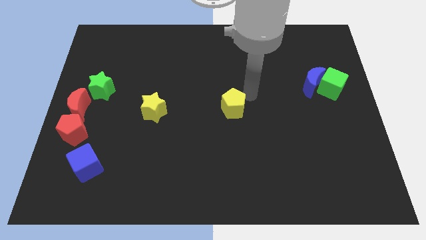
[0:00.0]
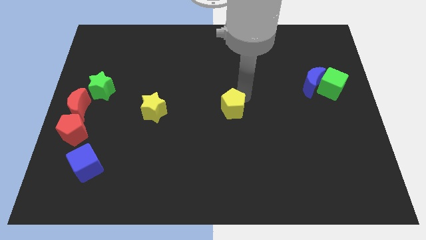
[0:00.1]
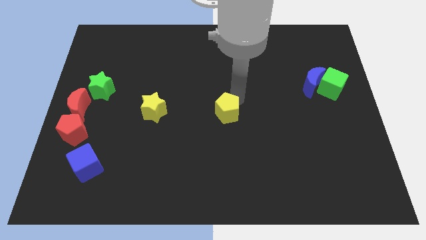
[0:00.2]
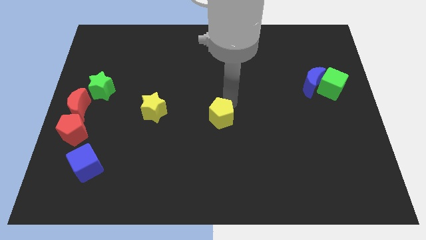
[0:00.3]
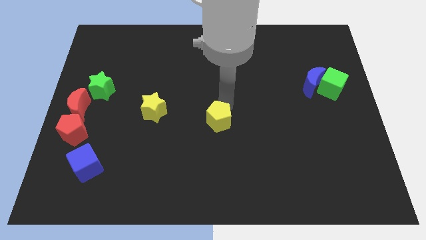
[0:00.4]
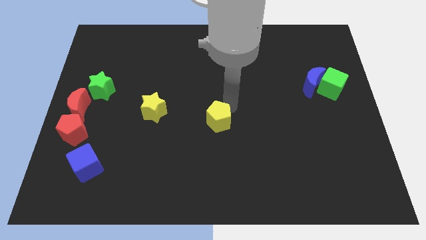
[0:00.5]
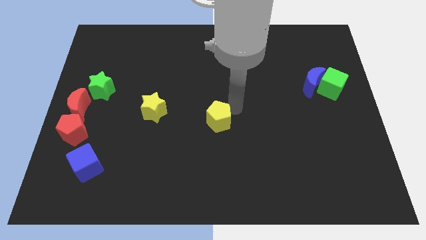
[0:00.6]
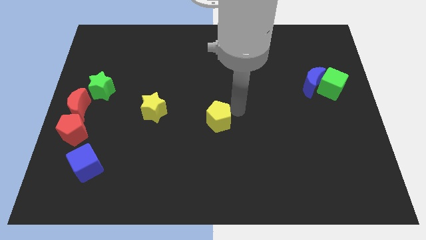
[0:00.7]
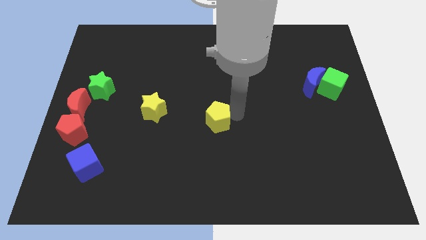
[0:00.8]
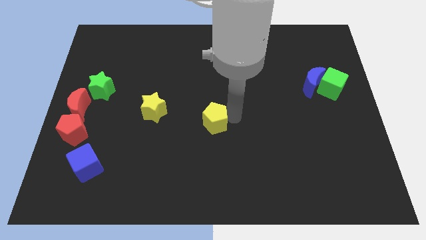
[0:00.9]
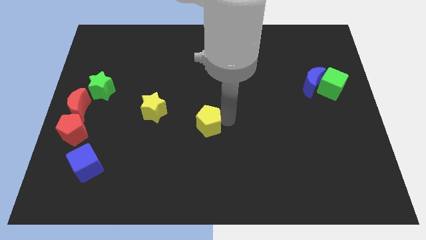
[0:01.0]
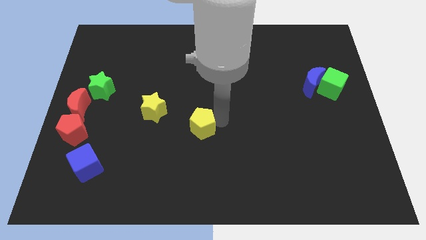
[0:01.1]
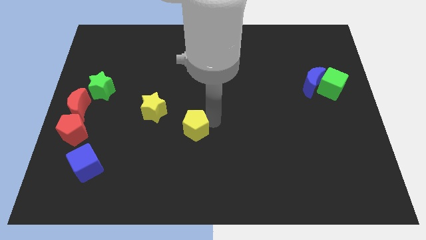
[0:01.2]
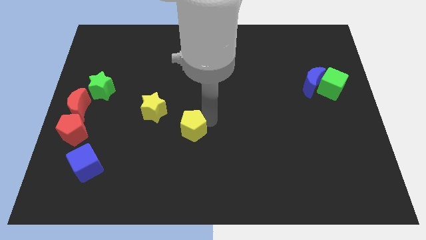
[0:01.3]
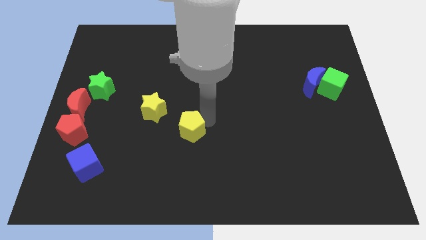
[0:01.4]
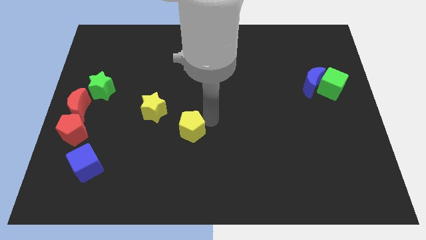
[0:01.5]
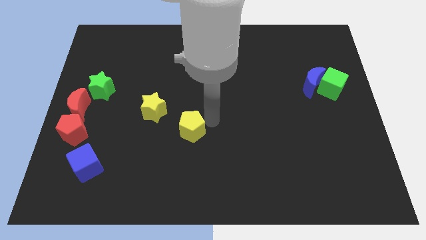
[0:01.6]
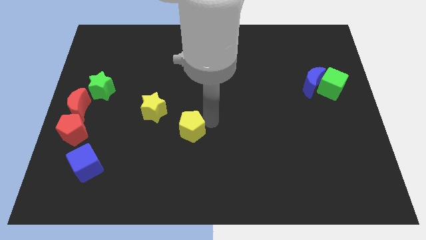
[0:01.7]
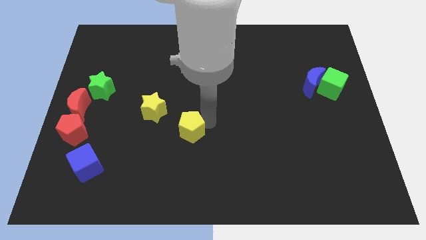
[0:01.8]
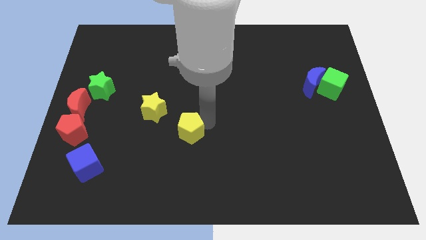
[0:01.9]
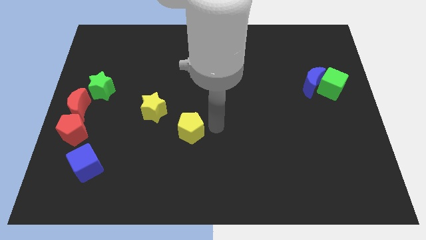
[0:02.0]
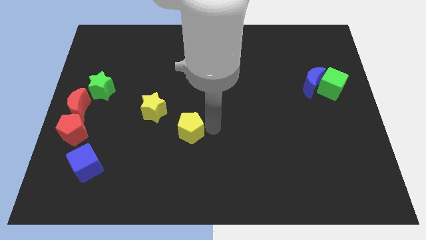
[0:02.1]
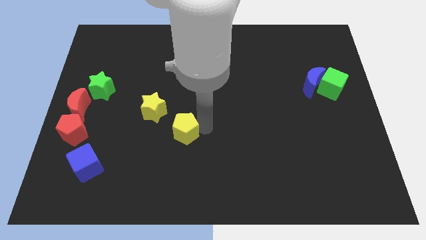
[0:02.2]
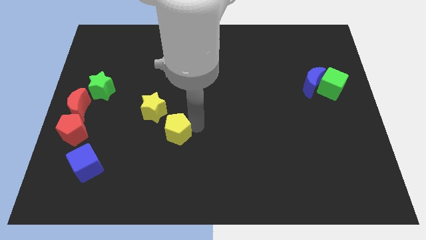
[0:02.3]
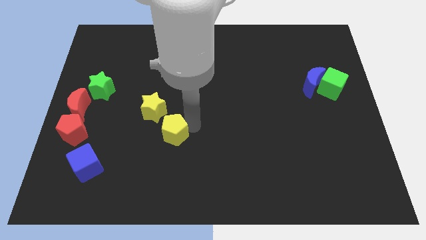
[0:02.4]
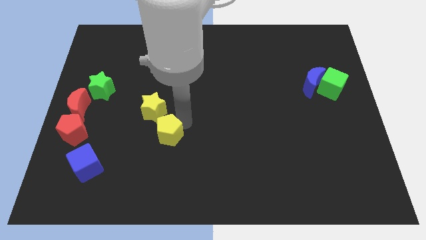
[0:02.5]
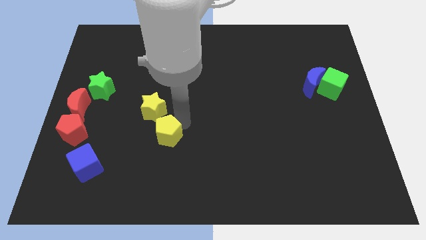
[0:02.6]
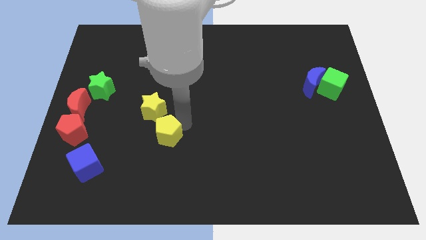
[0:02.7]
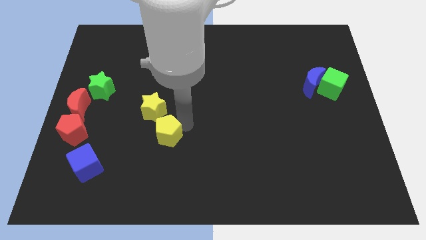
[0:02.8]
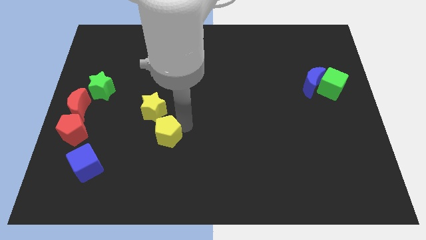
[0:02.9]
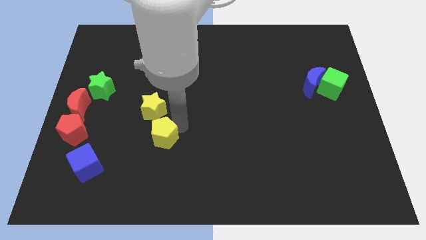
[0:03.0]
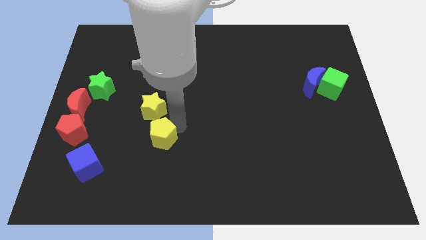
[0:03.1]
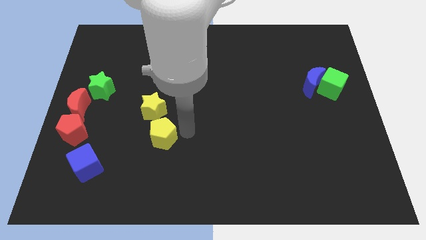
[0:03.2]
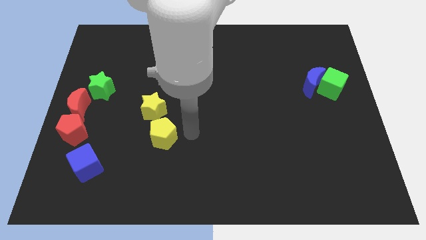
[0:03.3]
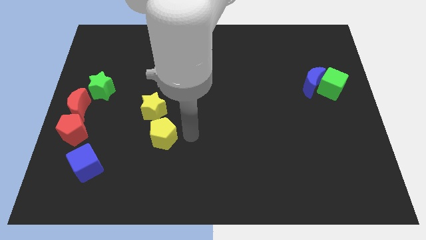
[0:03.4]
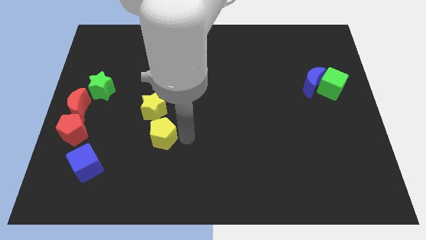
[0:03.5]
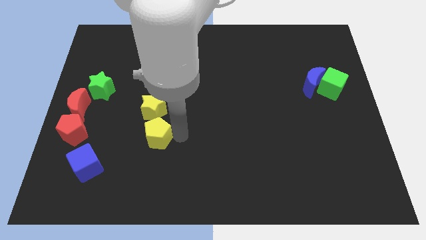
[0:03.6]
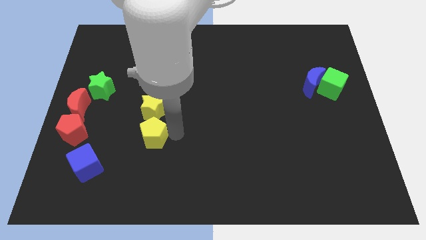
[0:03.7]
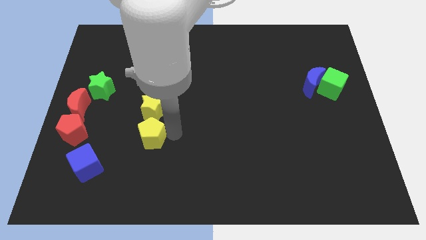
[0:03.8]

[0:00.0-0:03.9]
move the yellow pentagon below the yellow star

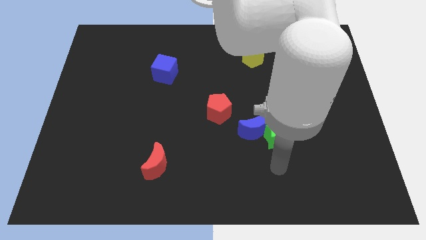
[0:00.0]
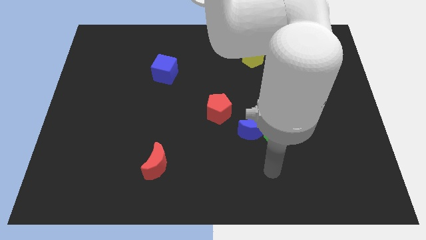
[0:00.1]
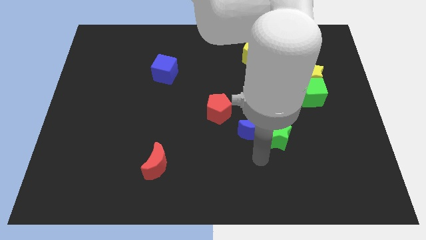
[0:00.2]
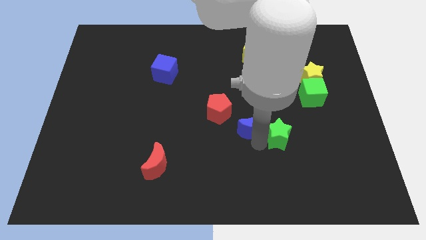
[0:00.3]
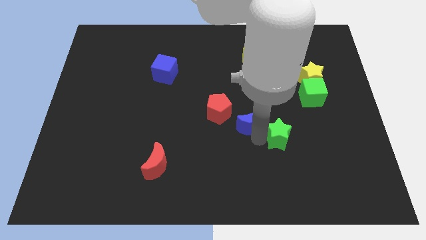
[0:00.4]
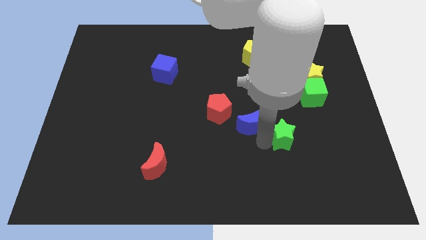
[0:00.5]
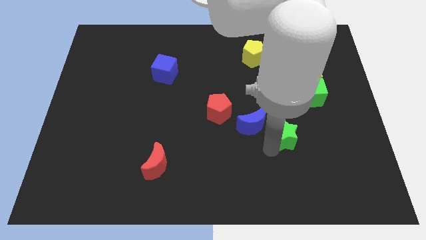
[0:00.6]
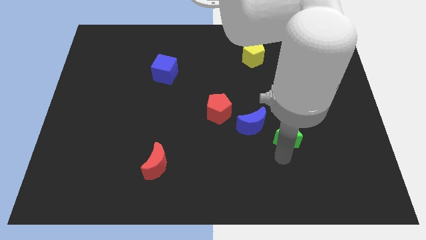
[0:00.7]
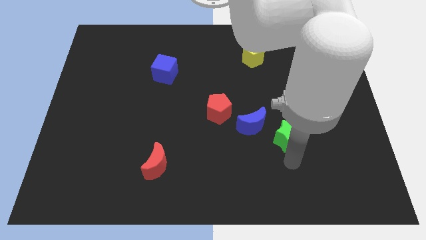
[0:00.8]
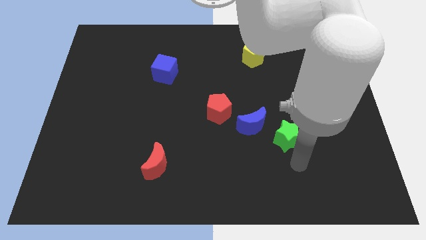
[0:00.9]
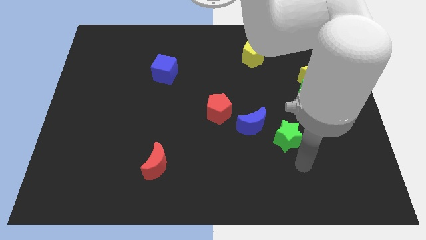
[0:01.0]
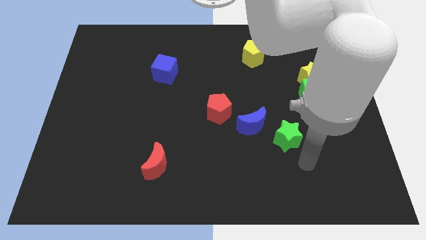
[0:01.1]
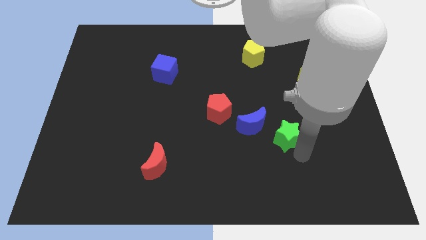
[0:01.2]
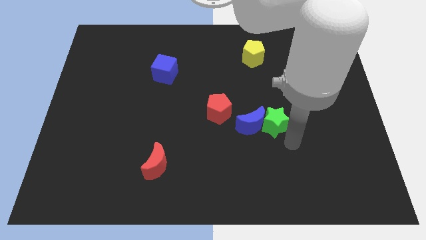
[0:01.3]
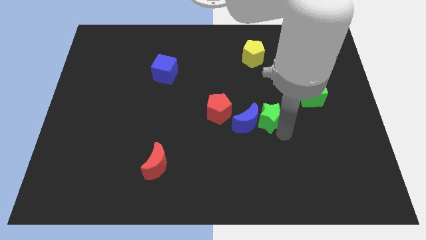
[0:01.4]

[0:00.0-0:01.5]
push the green star into the blue crescent

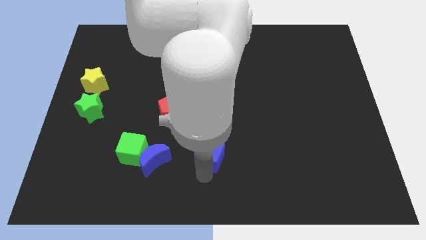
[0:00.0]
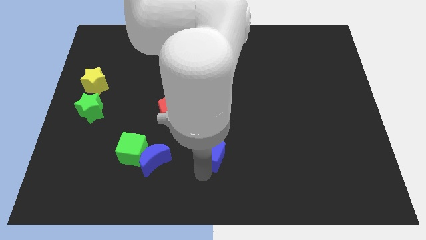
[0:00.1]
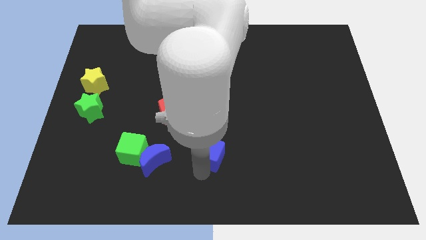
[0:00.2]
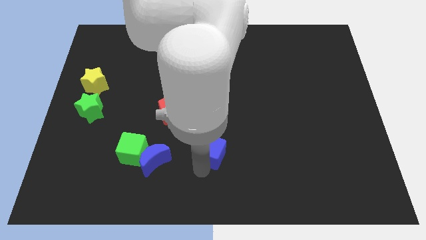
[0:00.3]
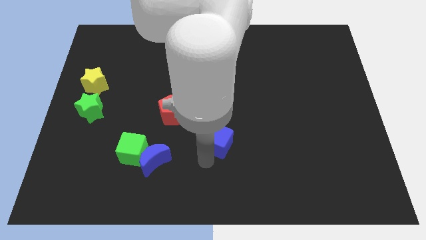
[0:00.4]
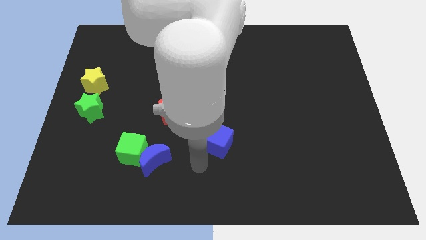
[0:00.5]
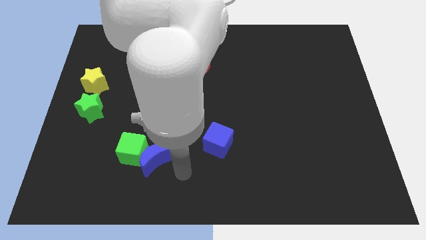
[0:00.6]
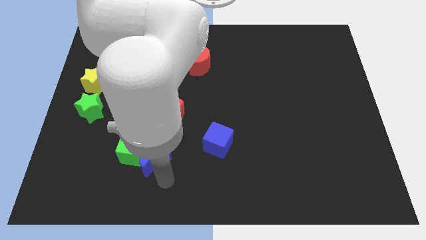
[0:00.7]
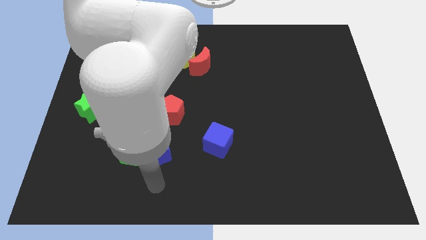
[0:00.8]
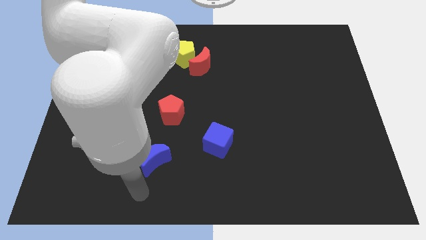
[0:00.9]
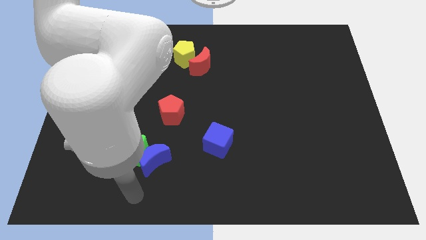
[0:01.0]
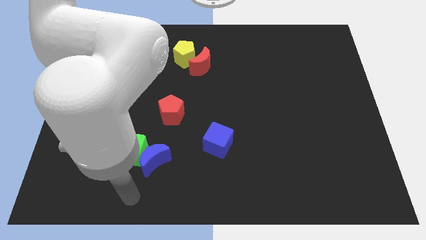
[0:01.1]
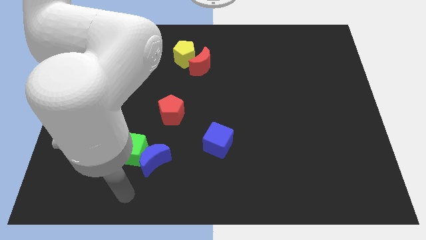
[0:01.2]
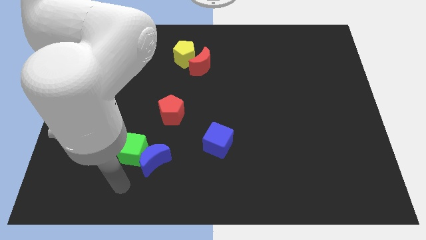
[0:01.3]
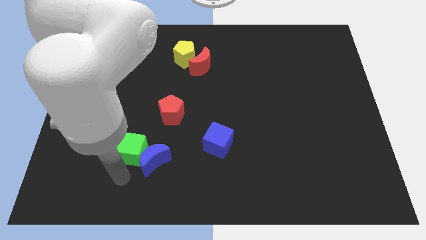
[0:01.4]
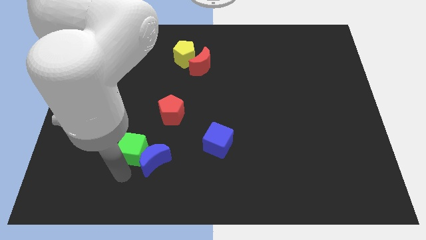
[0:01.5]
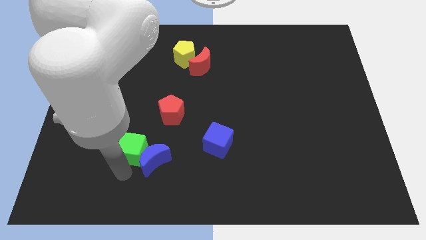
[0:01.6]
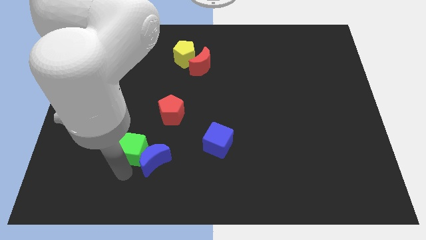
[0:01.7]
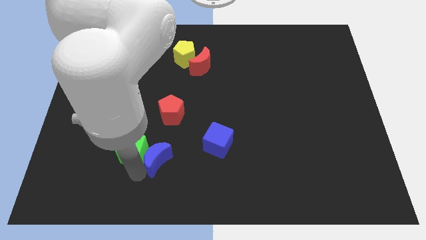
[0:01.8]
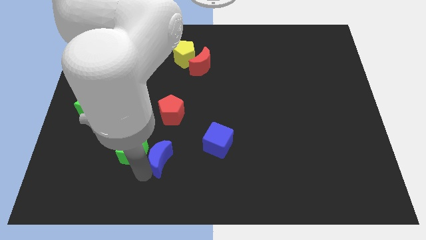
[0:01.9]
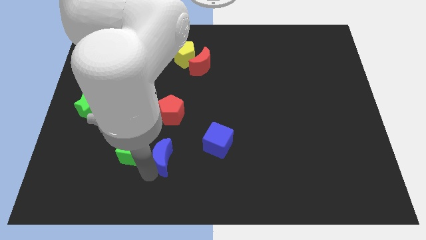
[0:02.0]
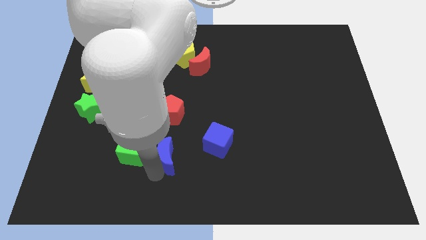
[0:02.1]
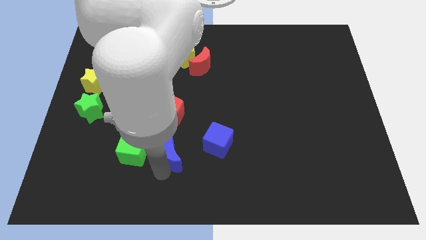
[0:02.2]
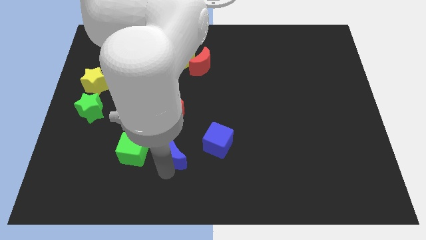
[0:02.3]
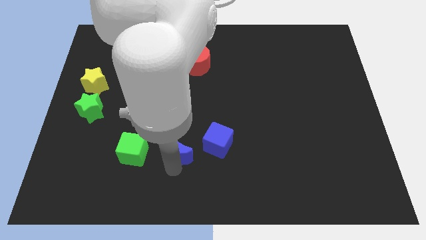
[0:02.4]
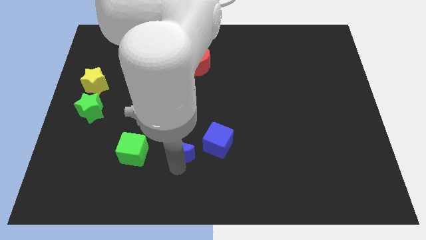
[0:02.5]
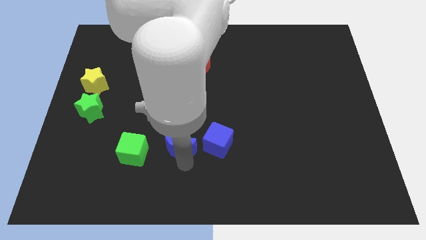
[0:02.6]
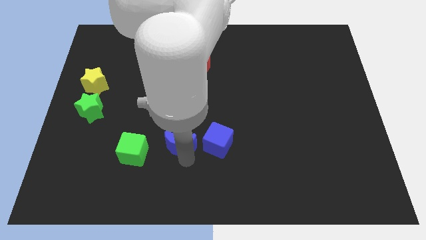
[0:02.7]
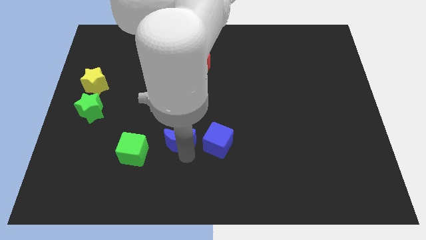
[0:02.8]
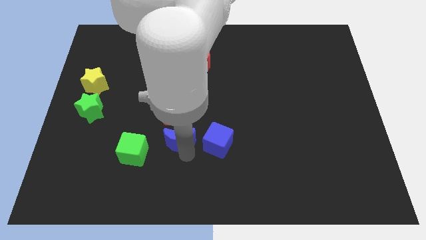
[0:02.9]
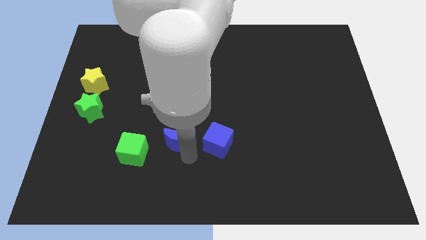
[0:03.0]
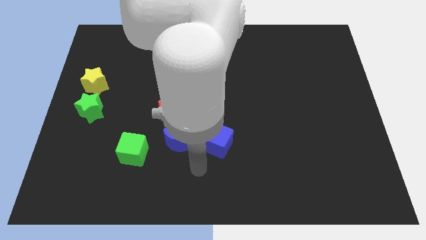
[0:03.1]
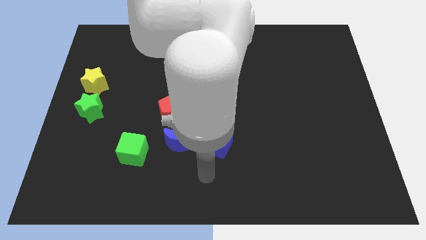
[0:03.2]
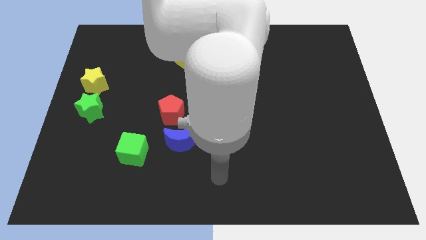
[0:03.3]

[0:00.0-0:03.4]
push the blue crescent to the bottom of the red pentagon

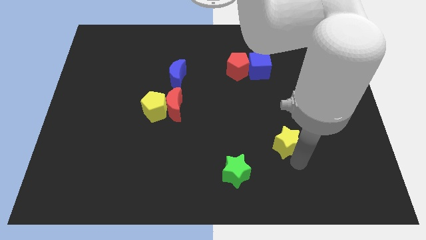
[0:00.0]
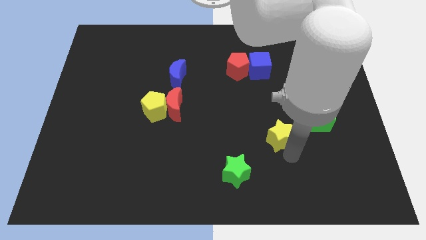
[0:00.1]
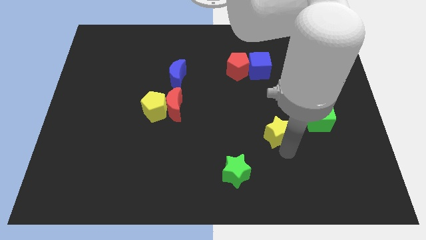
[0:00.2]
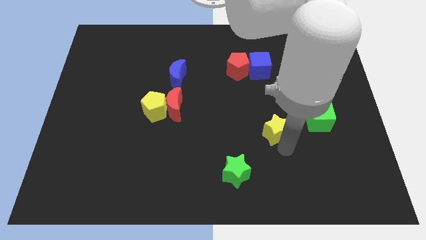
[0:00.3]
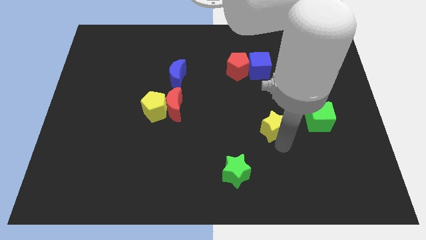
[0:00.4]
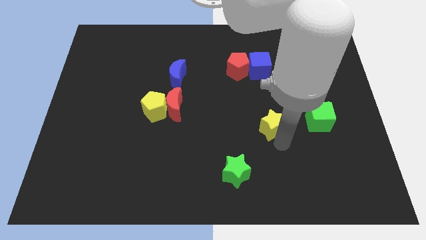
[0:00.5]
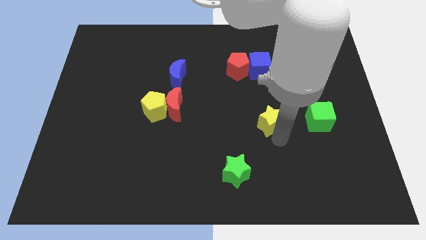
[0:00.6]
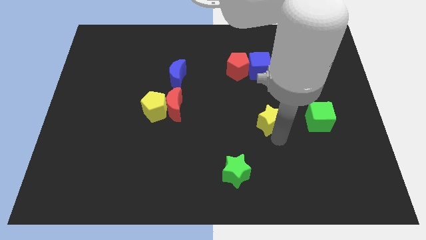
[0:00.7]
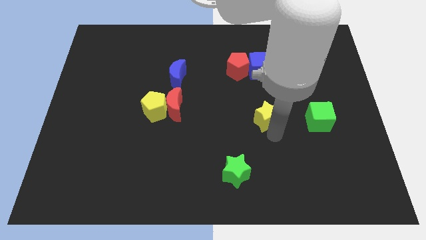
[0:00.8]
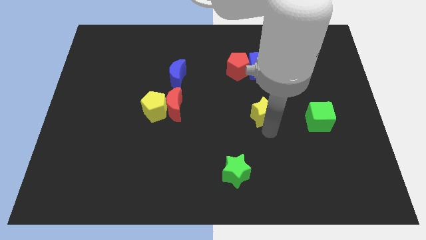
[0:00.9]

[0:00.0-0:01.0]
move yellow star parallel left to green cube
